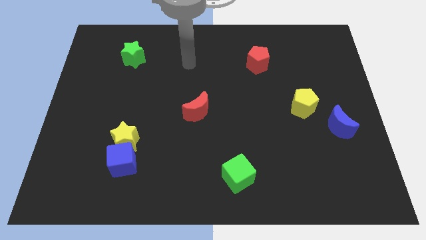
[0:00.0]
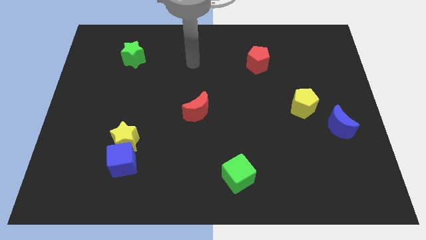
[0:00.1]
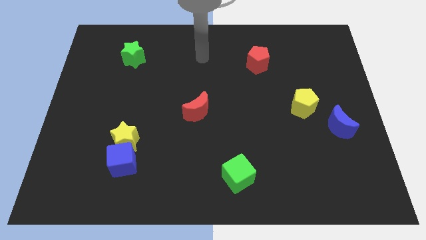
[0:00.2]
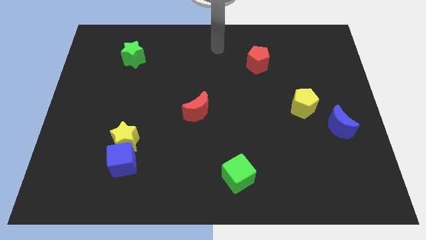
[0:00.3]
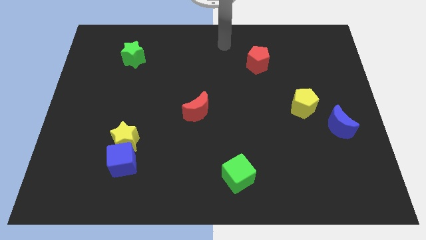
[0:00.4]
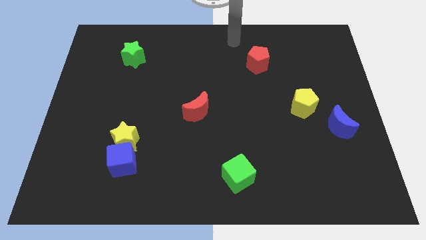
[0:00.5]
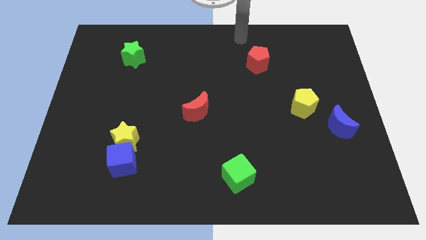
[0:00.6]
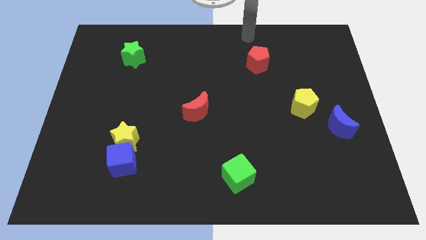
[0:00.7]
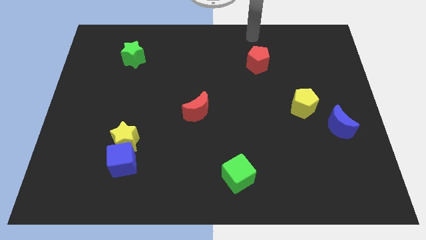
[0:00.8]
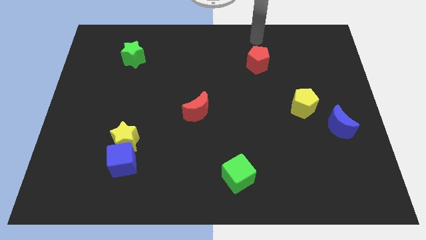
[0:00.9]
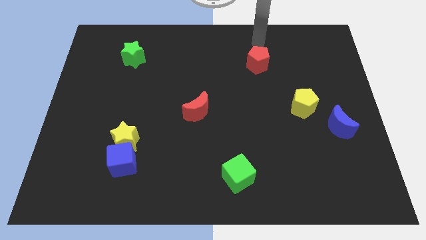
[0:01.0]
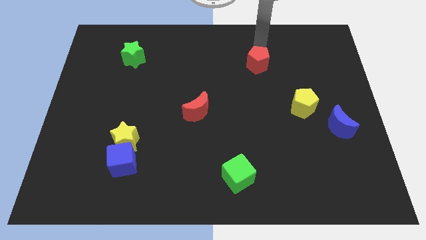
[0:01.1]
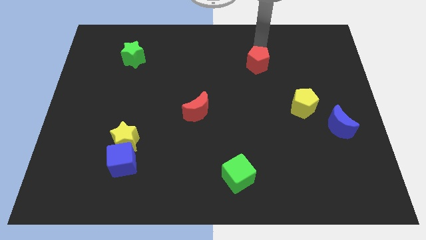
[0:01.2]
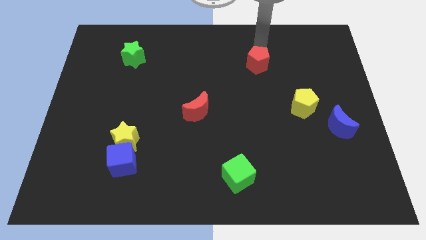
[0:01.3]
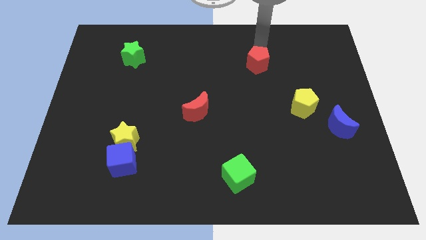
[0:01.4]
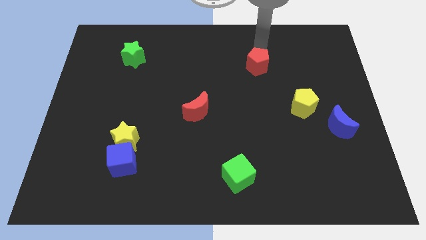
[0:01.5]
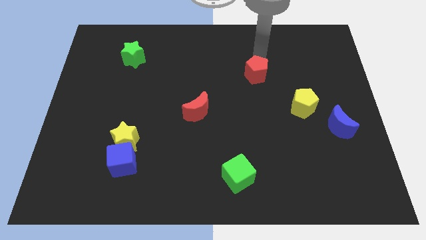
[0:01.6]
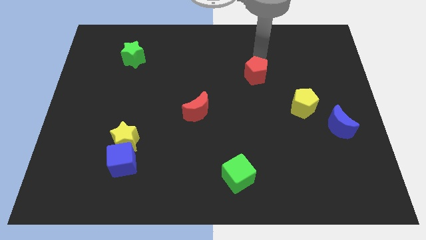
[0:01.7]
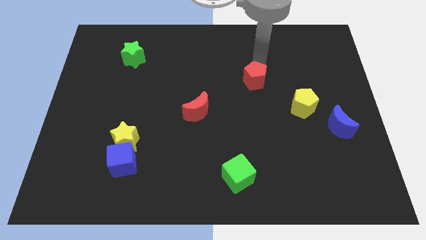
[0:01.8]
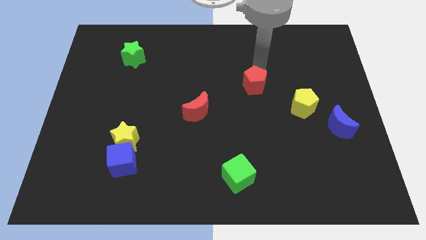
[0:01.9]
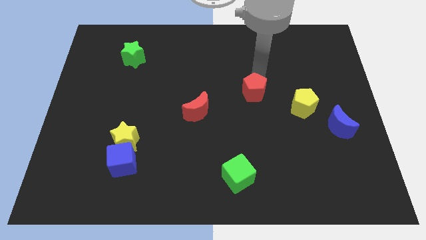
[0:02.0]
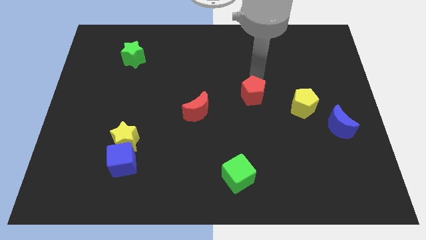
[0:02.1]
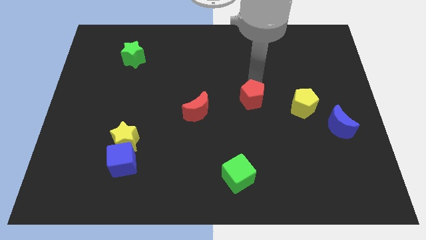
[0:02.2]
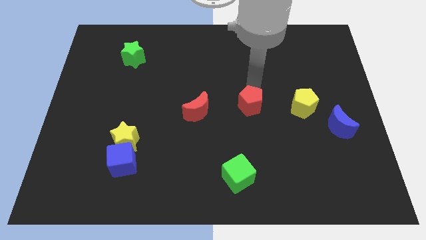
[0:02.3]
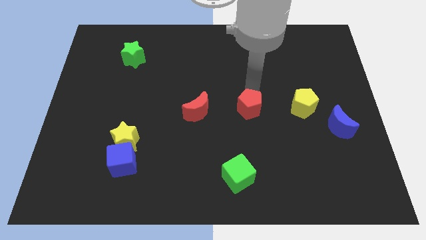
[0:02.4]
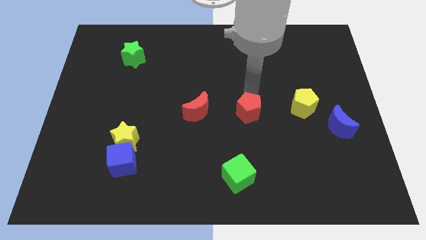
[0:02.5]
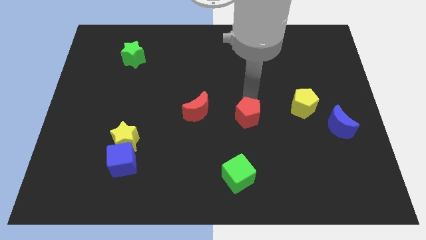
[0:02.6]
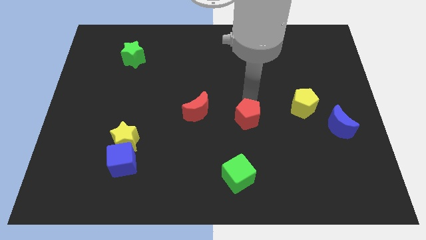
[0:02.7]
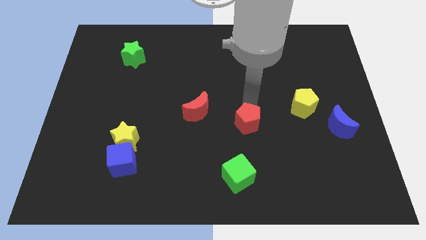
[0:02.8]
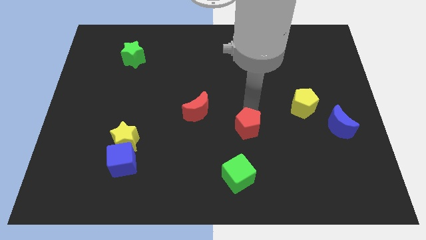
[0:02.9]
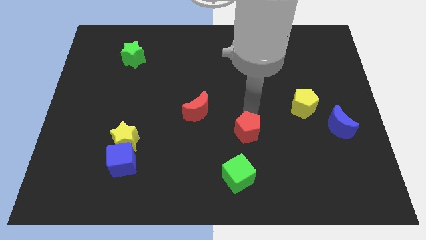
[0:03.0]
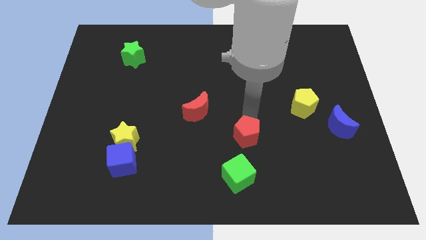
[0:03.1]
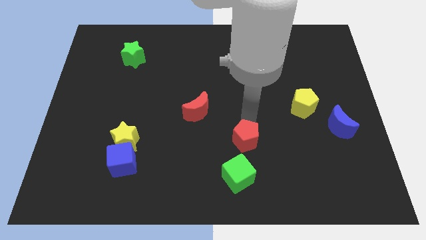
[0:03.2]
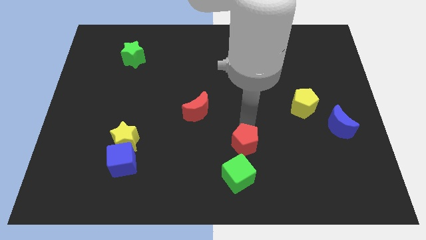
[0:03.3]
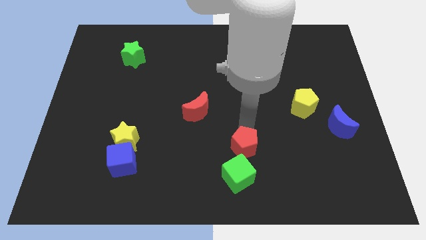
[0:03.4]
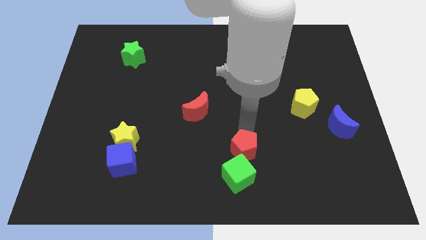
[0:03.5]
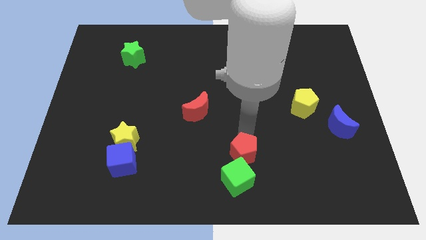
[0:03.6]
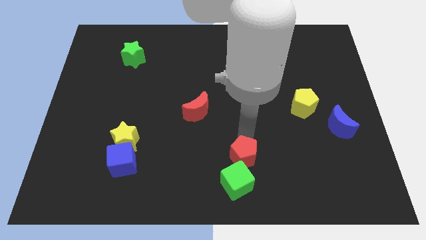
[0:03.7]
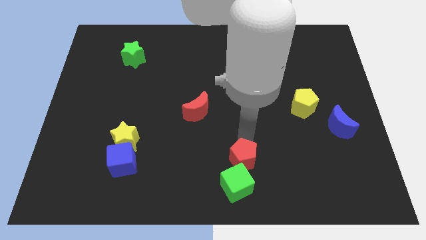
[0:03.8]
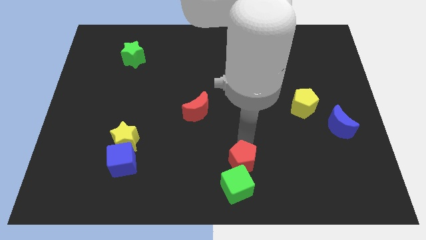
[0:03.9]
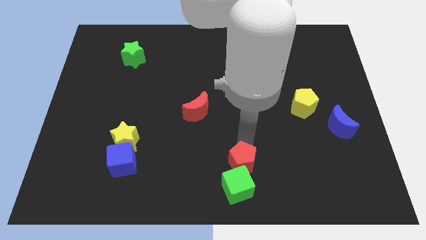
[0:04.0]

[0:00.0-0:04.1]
slide the red pentagon towards the green cube

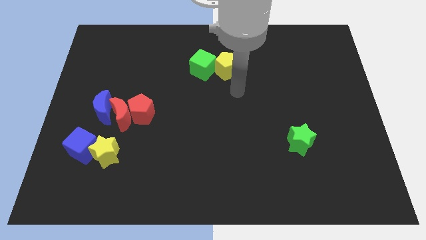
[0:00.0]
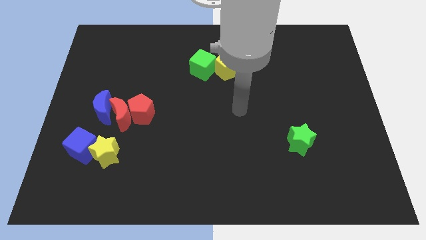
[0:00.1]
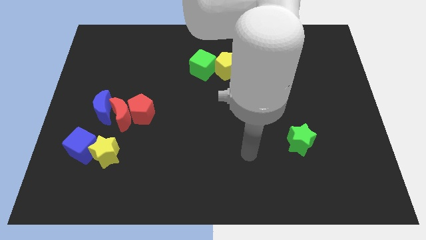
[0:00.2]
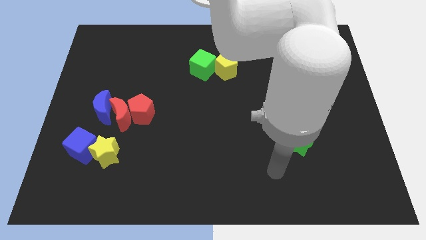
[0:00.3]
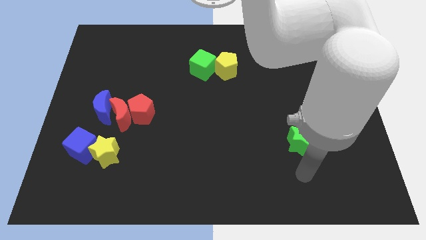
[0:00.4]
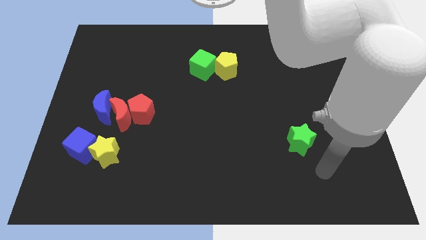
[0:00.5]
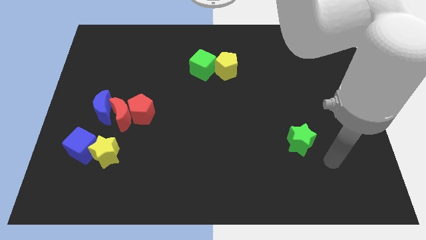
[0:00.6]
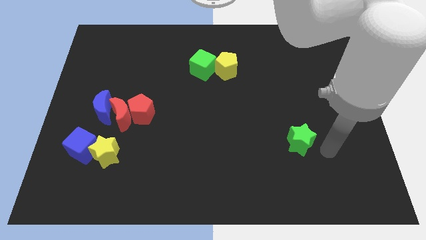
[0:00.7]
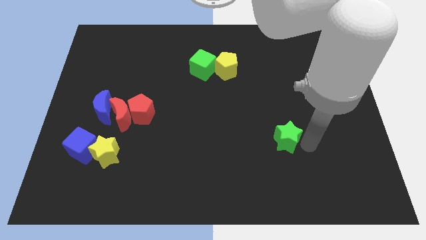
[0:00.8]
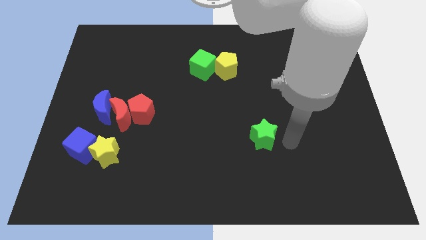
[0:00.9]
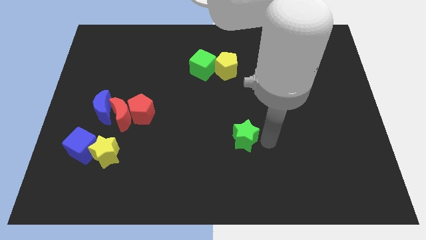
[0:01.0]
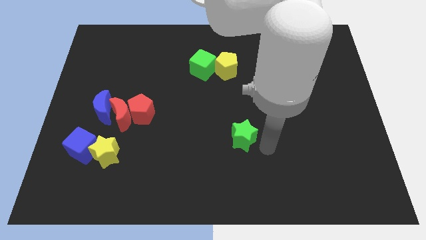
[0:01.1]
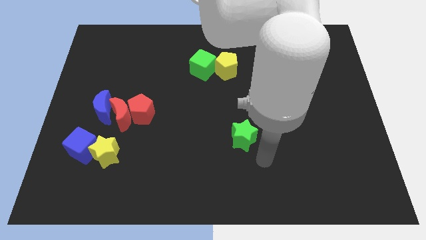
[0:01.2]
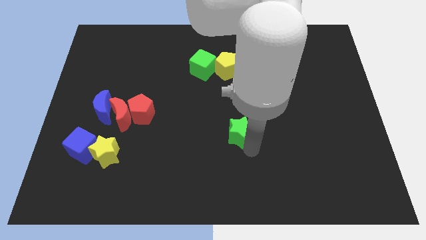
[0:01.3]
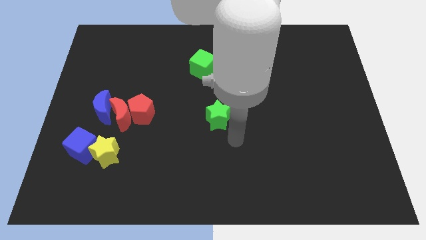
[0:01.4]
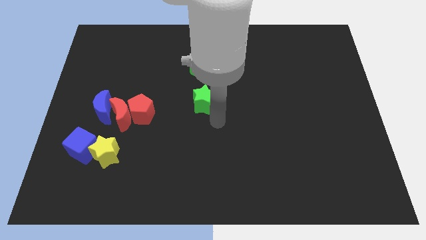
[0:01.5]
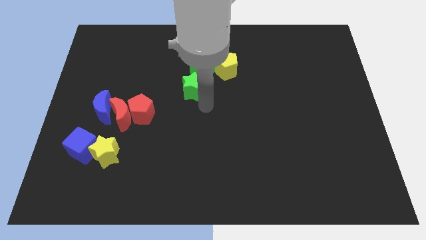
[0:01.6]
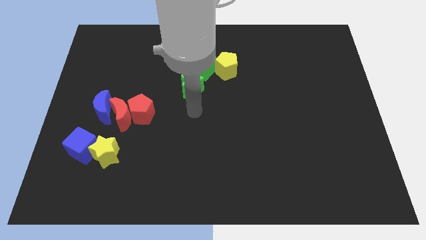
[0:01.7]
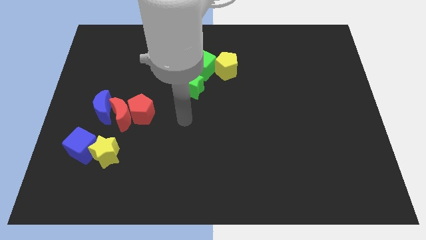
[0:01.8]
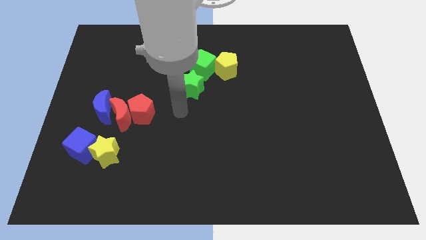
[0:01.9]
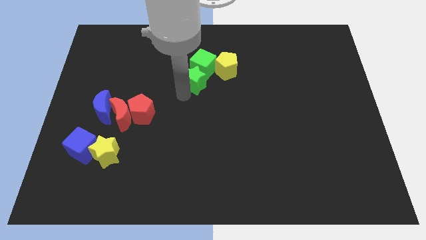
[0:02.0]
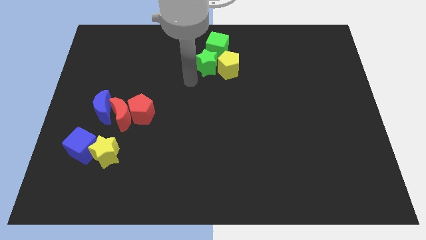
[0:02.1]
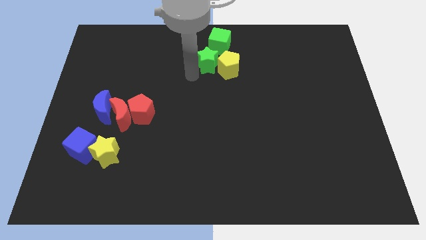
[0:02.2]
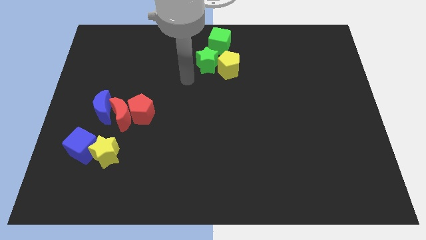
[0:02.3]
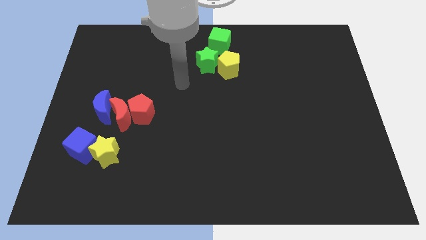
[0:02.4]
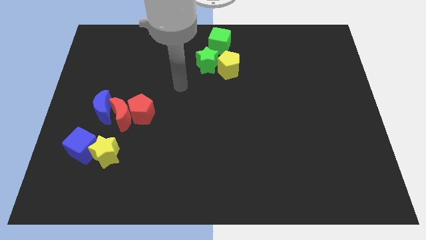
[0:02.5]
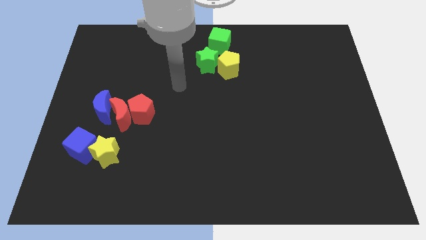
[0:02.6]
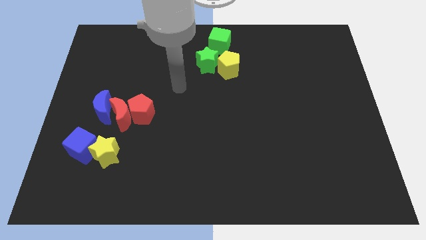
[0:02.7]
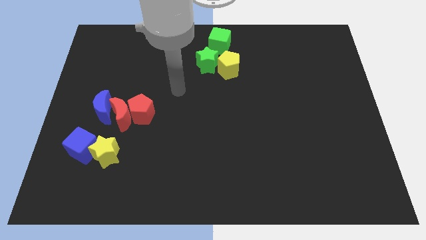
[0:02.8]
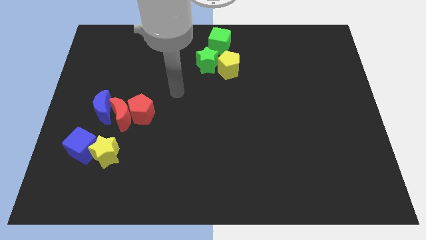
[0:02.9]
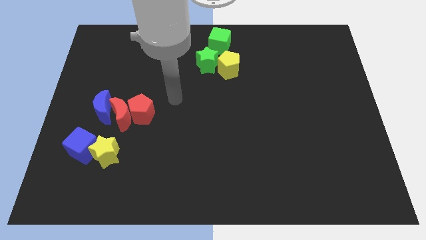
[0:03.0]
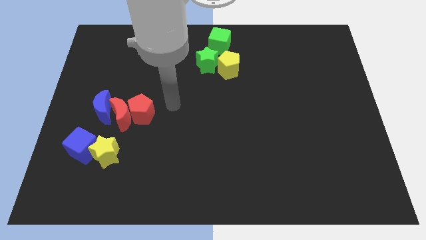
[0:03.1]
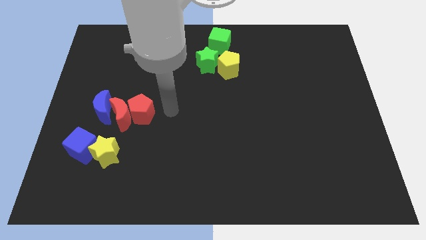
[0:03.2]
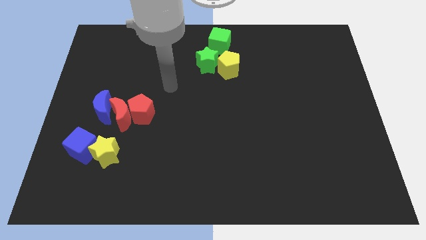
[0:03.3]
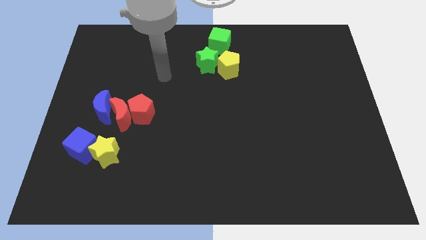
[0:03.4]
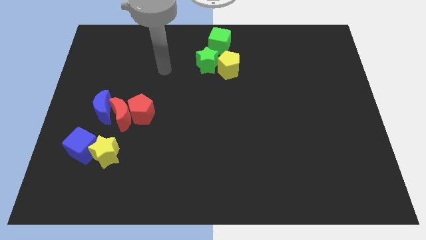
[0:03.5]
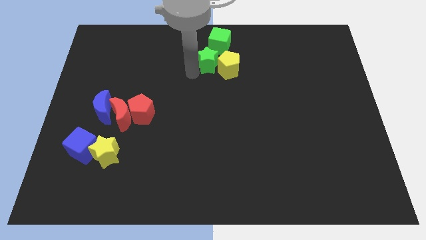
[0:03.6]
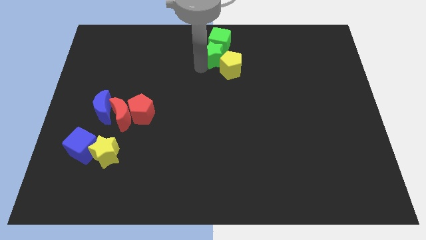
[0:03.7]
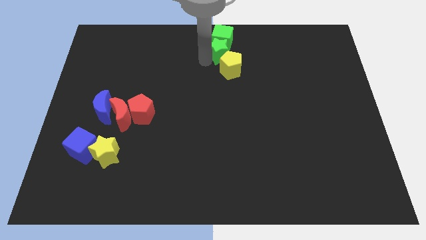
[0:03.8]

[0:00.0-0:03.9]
put the green star to the green cube

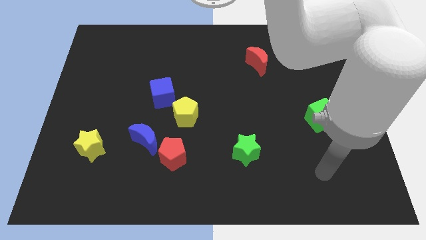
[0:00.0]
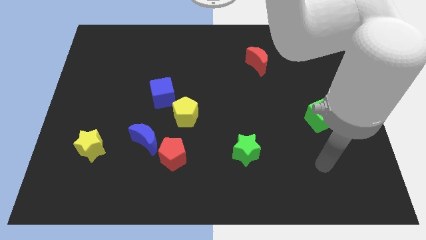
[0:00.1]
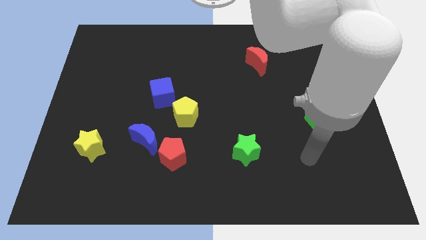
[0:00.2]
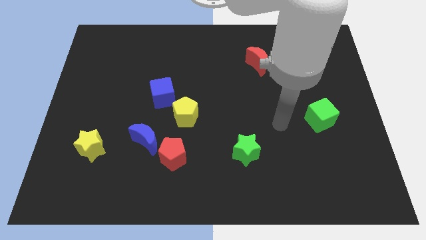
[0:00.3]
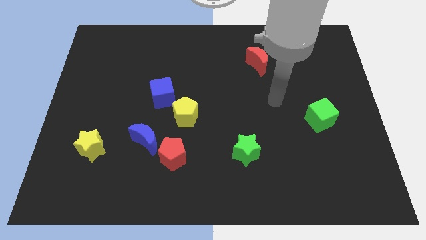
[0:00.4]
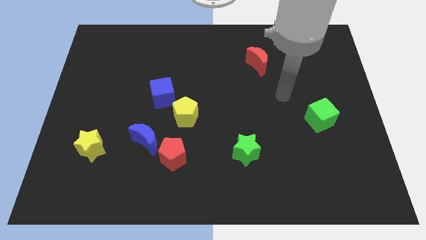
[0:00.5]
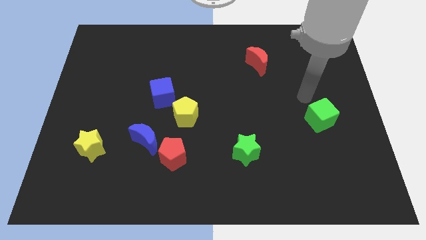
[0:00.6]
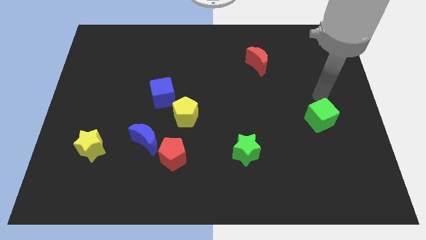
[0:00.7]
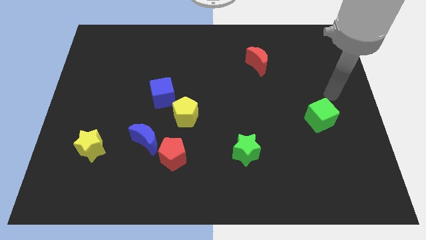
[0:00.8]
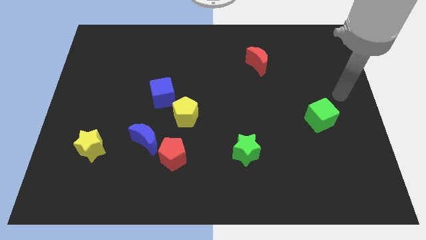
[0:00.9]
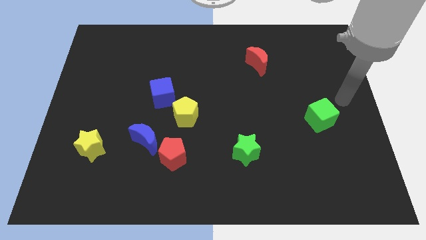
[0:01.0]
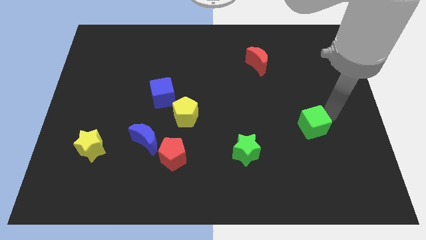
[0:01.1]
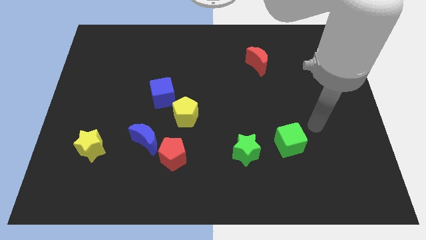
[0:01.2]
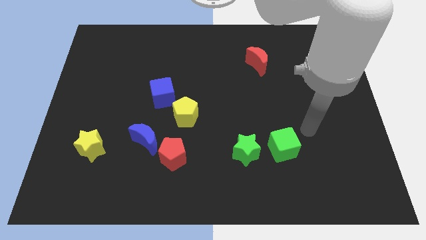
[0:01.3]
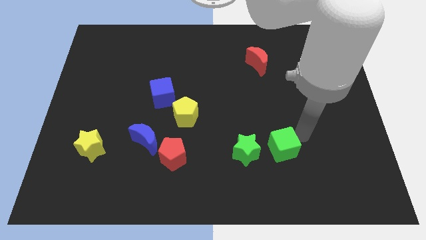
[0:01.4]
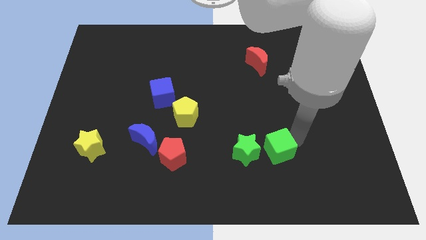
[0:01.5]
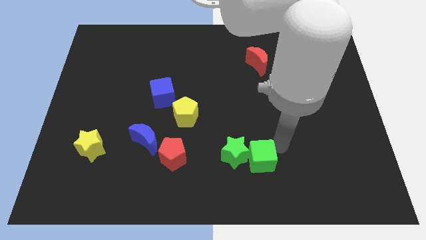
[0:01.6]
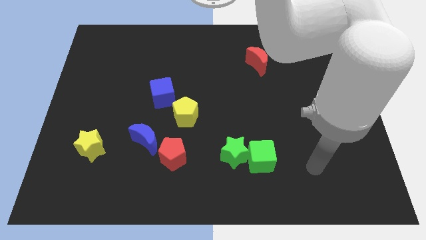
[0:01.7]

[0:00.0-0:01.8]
move the green cube to the green star
